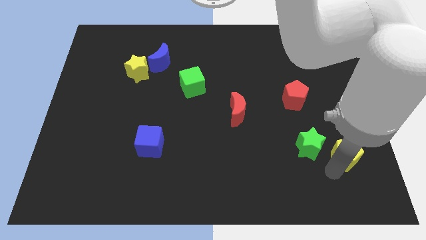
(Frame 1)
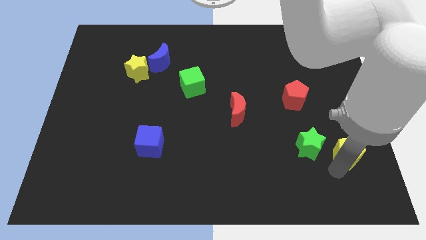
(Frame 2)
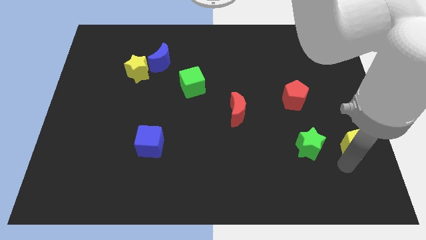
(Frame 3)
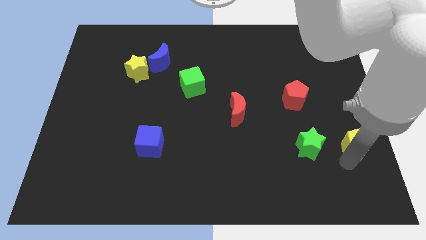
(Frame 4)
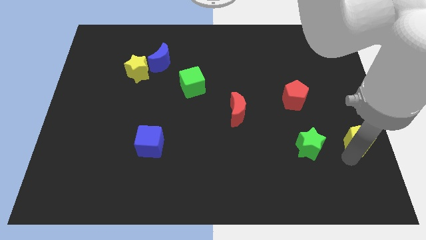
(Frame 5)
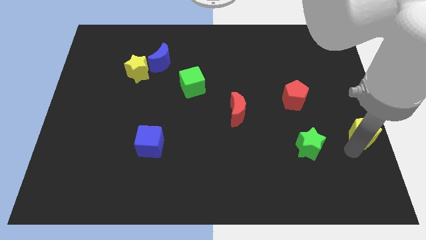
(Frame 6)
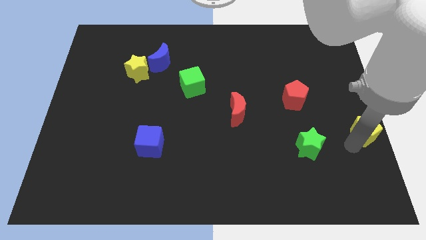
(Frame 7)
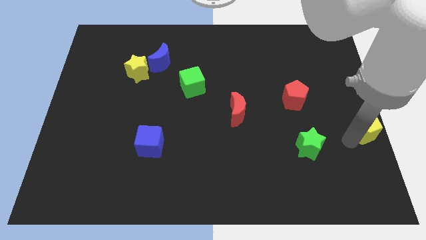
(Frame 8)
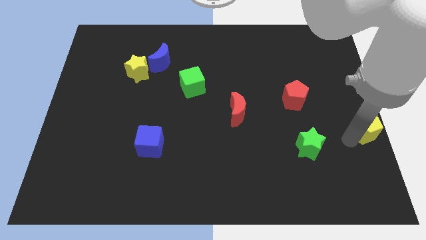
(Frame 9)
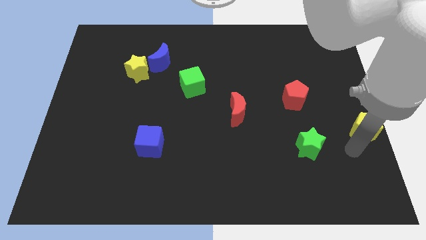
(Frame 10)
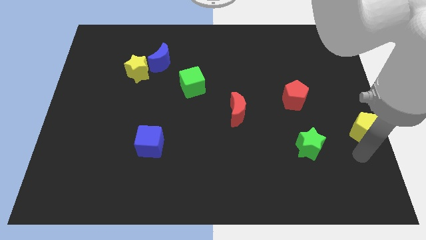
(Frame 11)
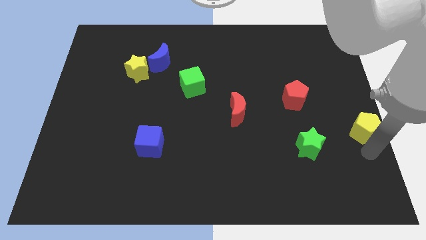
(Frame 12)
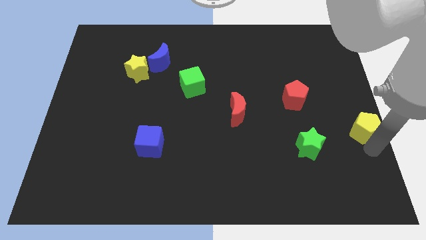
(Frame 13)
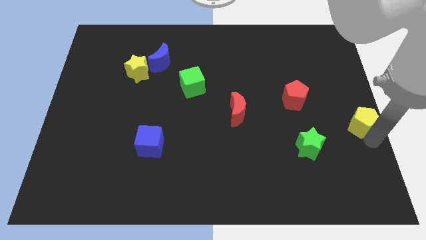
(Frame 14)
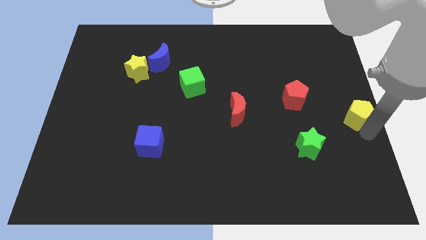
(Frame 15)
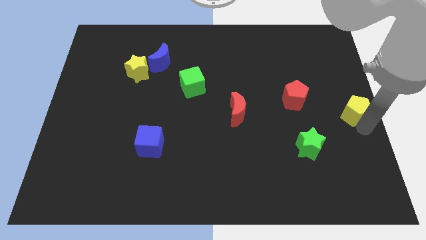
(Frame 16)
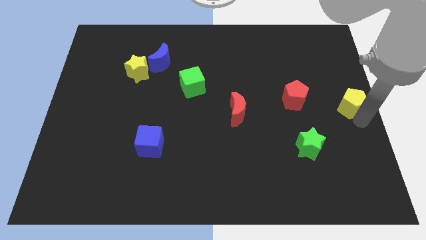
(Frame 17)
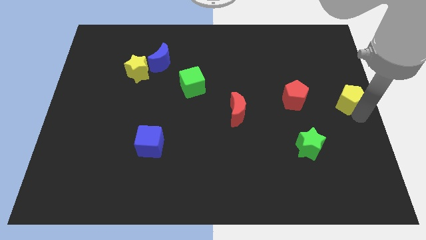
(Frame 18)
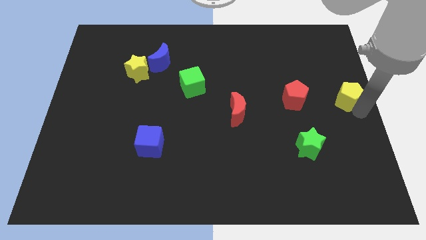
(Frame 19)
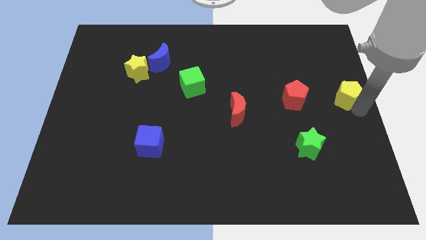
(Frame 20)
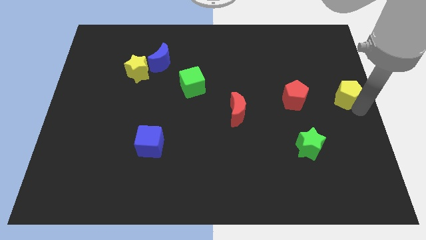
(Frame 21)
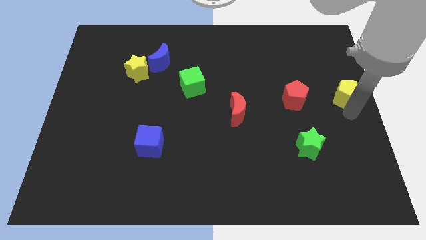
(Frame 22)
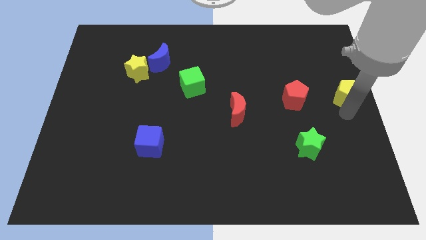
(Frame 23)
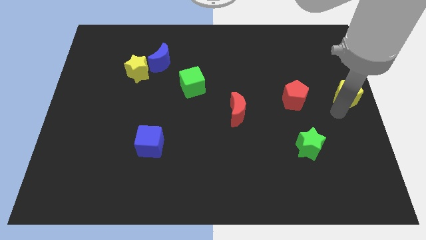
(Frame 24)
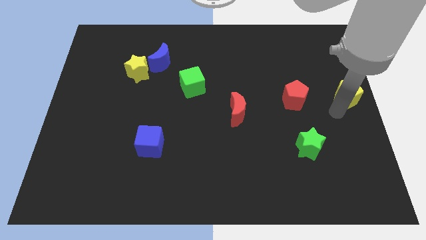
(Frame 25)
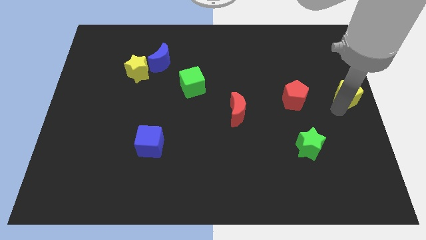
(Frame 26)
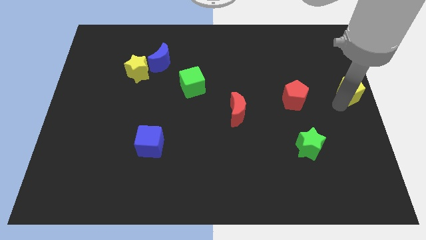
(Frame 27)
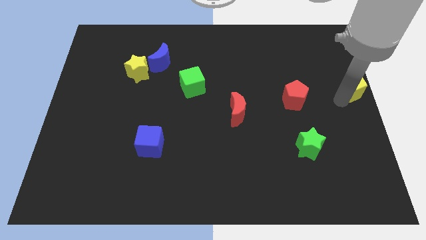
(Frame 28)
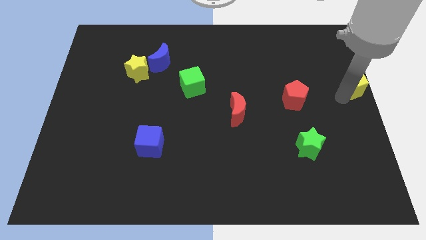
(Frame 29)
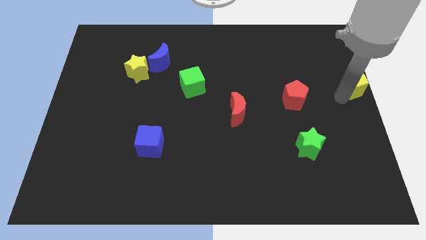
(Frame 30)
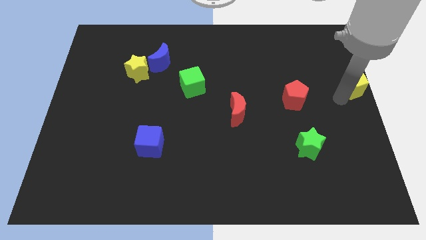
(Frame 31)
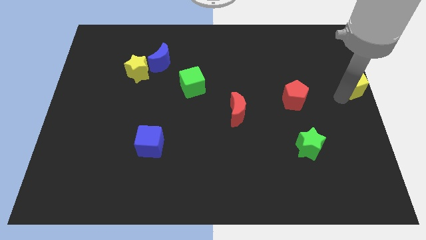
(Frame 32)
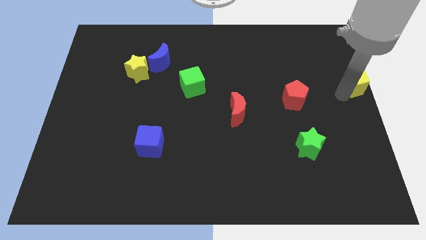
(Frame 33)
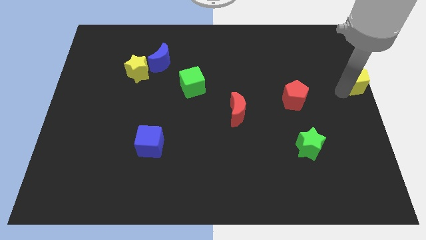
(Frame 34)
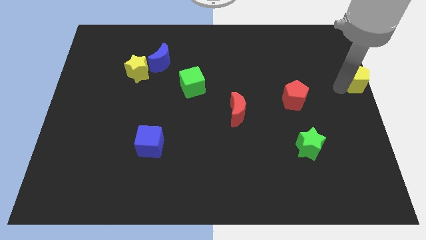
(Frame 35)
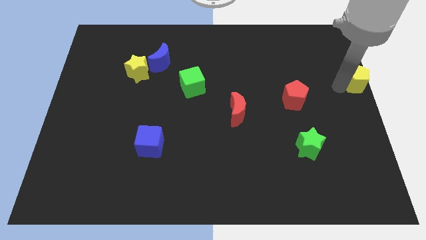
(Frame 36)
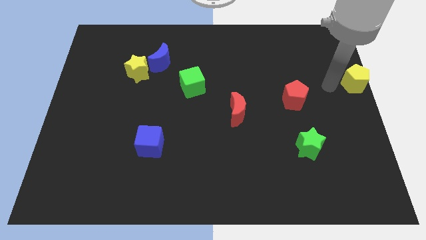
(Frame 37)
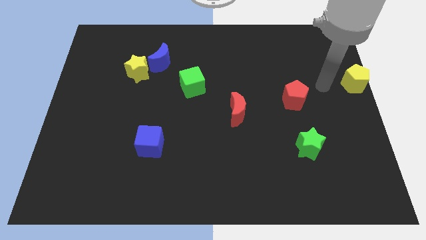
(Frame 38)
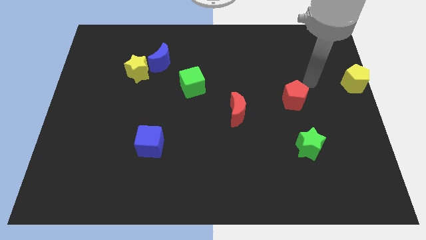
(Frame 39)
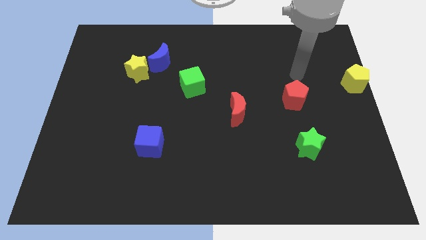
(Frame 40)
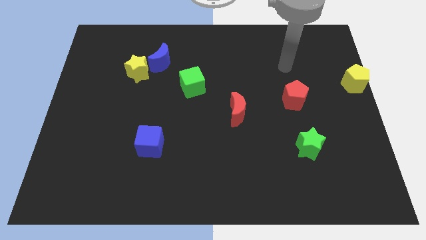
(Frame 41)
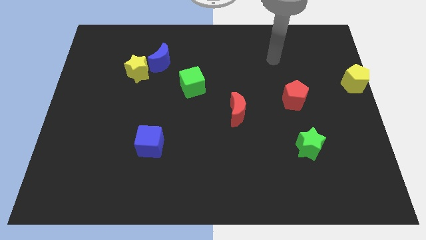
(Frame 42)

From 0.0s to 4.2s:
place yellow pentagon to the right side of the red pentagon

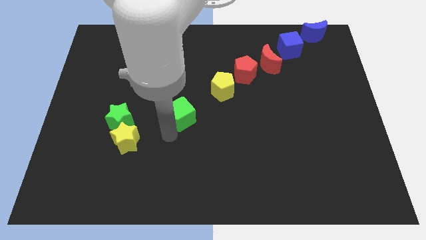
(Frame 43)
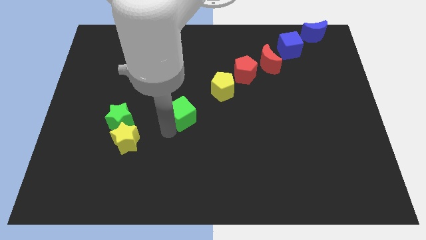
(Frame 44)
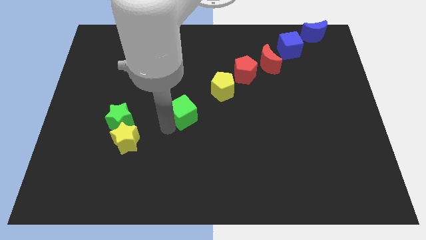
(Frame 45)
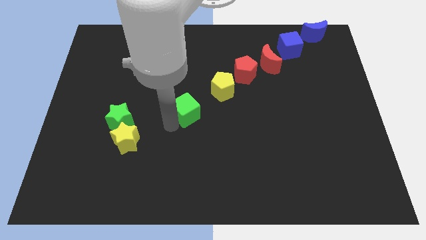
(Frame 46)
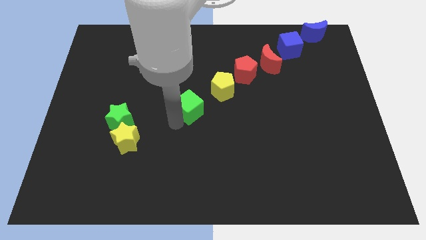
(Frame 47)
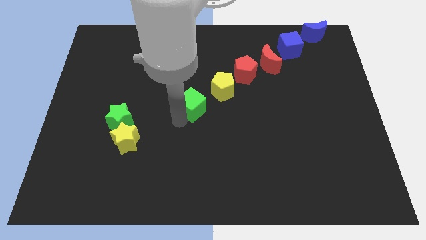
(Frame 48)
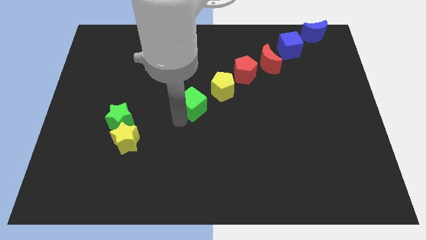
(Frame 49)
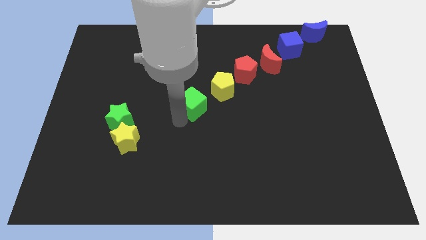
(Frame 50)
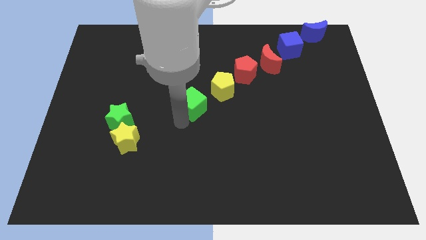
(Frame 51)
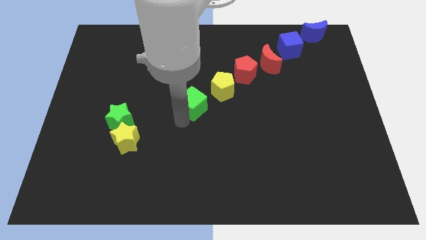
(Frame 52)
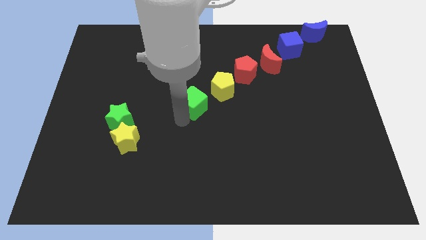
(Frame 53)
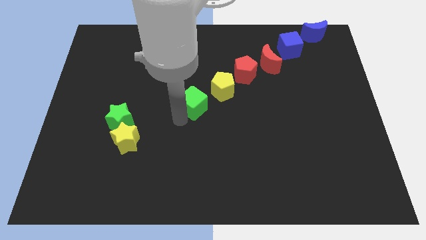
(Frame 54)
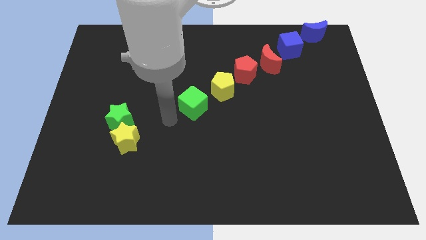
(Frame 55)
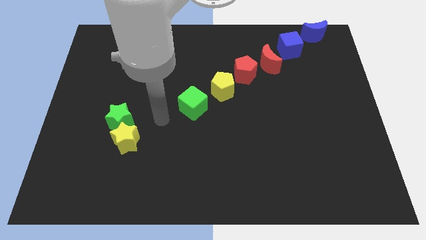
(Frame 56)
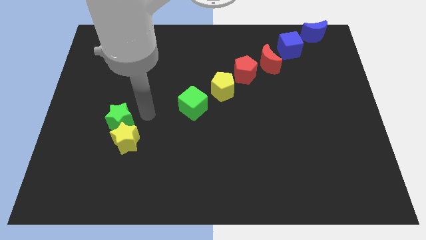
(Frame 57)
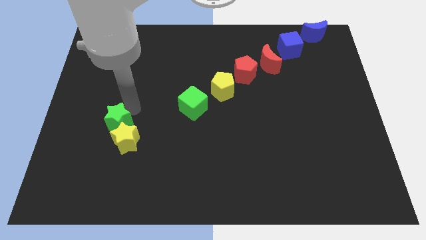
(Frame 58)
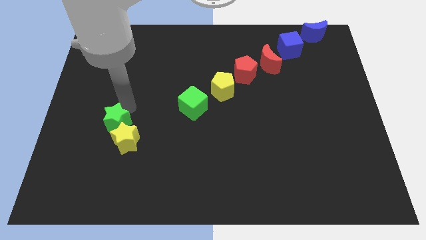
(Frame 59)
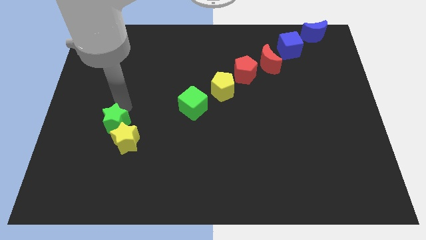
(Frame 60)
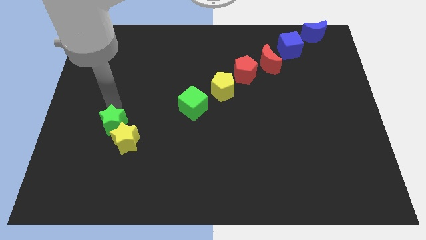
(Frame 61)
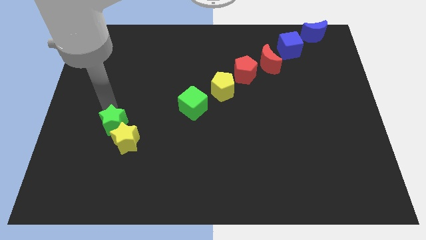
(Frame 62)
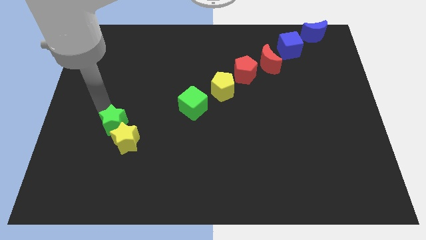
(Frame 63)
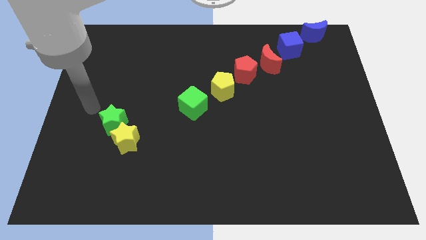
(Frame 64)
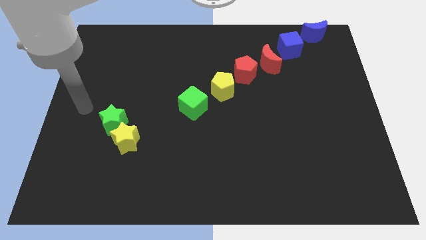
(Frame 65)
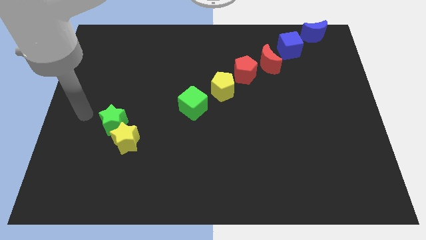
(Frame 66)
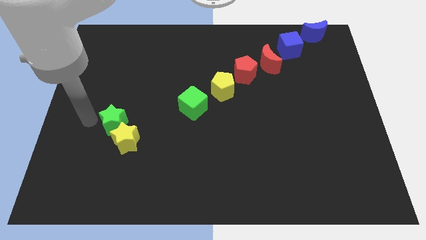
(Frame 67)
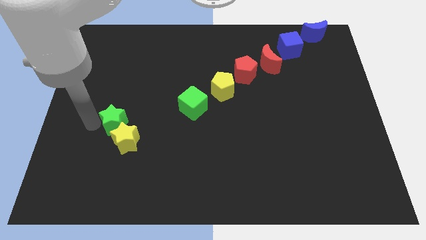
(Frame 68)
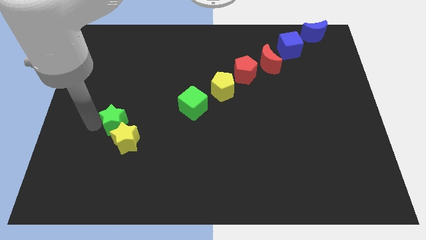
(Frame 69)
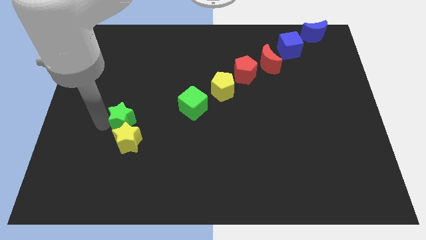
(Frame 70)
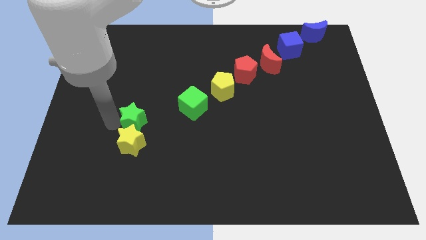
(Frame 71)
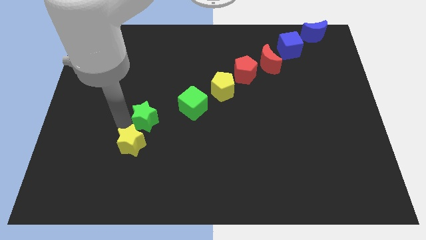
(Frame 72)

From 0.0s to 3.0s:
separate the green star from the yellow star

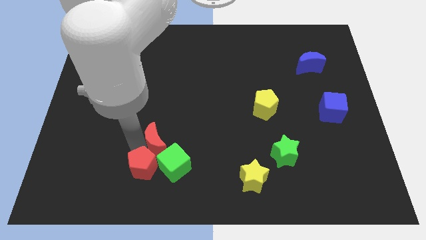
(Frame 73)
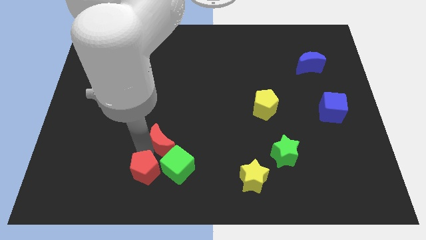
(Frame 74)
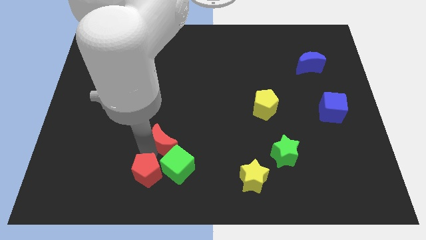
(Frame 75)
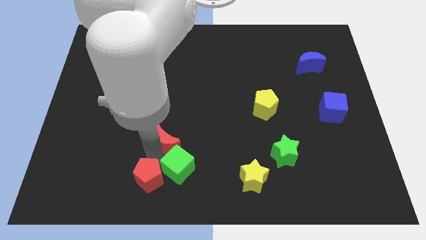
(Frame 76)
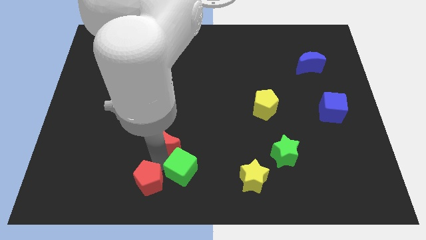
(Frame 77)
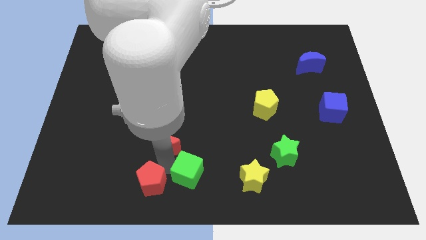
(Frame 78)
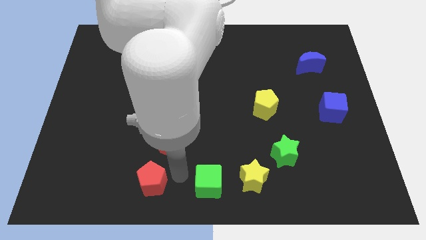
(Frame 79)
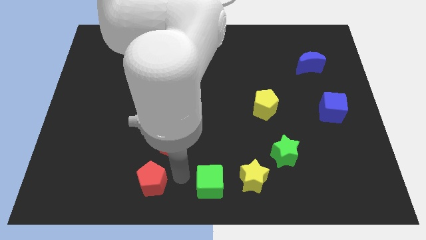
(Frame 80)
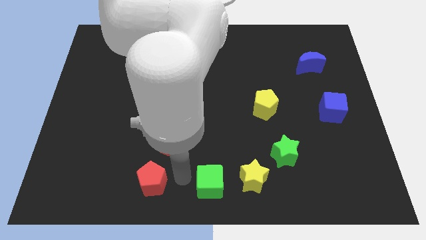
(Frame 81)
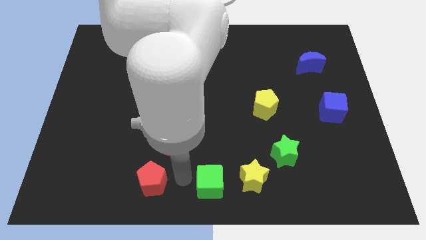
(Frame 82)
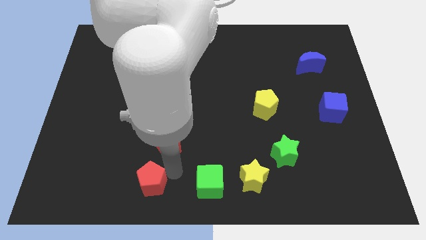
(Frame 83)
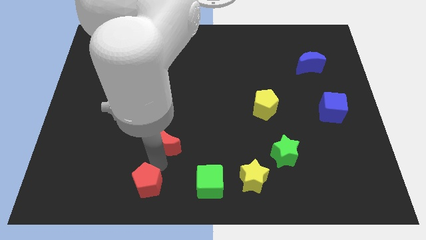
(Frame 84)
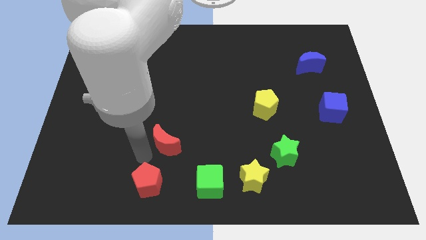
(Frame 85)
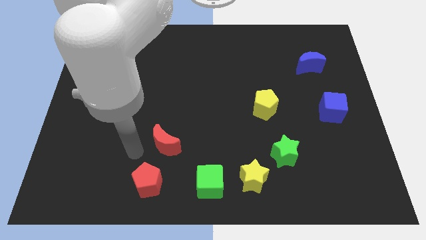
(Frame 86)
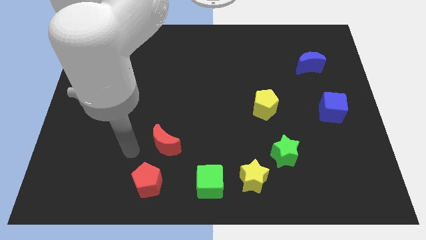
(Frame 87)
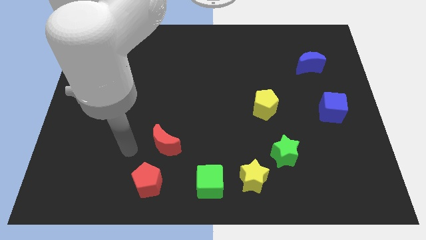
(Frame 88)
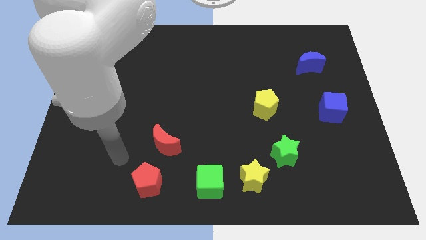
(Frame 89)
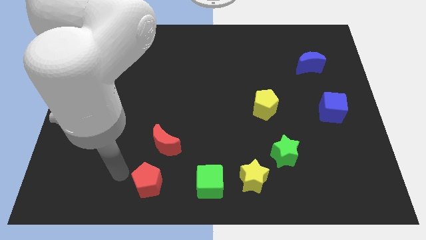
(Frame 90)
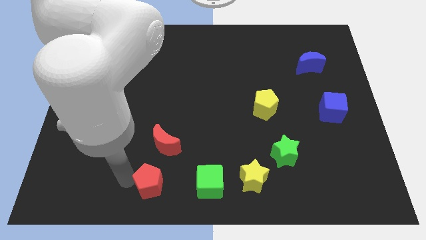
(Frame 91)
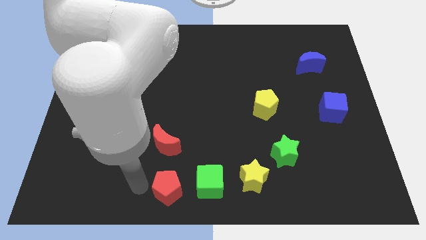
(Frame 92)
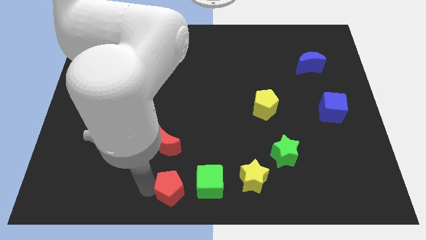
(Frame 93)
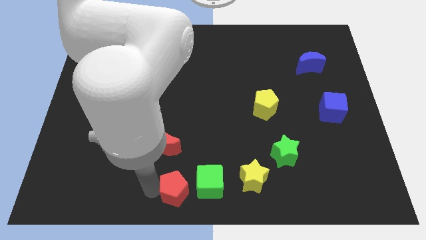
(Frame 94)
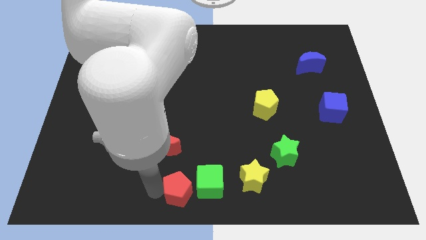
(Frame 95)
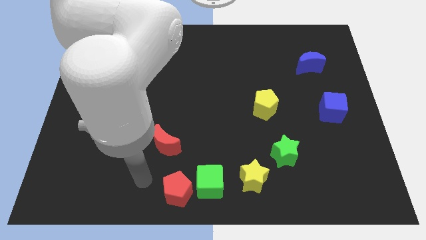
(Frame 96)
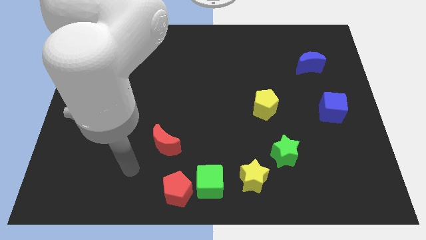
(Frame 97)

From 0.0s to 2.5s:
push the red pentagon horizontally left to the yellow star along with the green cube
